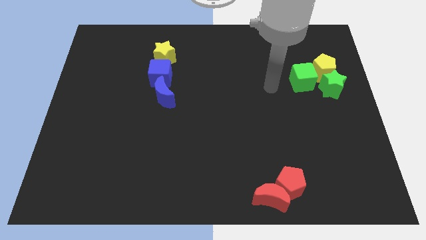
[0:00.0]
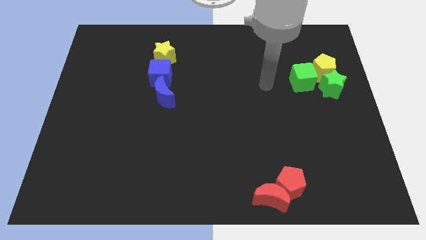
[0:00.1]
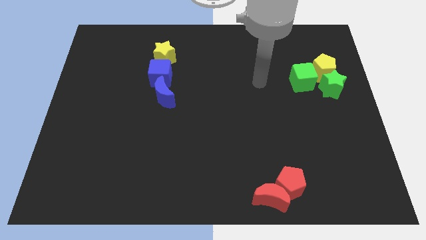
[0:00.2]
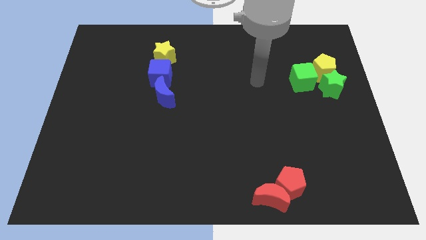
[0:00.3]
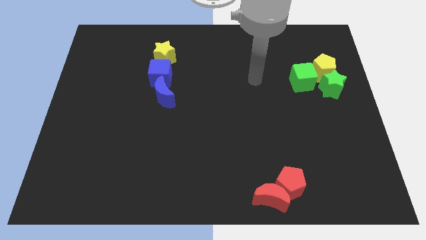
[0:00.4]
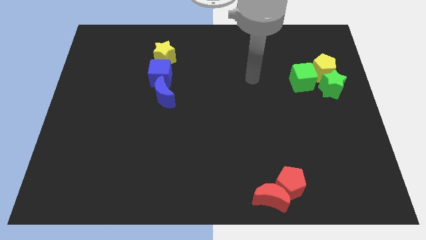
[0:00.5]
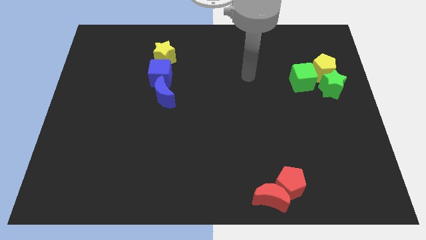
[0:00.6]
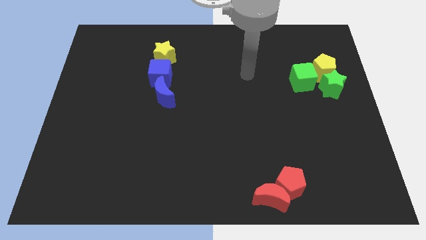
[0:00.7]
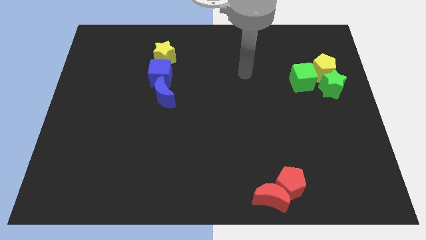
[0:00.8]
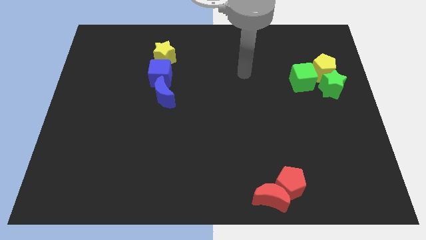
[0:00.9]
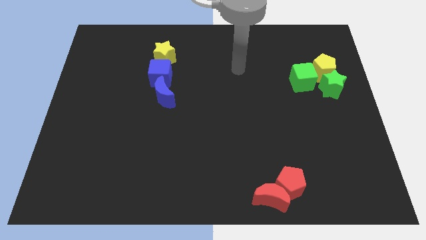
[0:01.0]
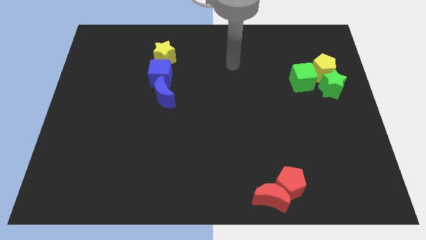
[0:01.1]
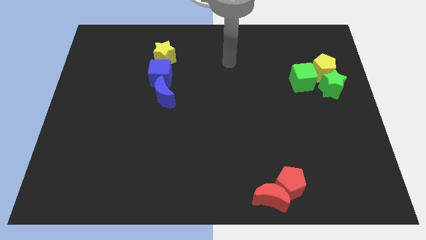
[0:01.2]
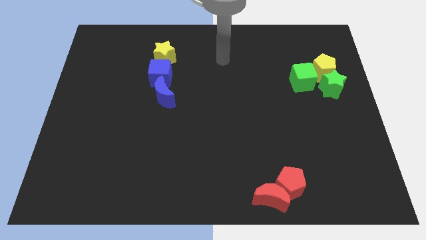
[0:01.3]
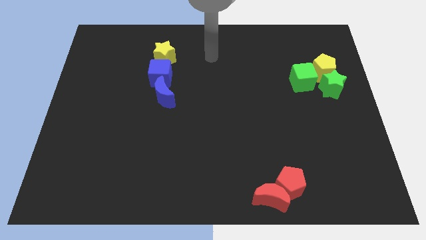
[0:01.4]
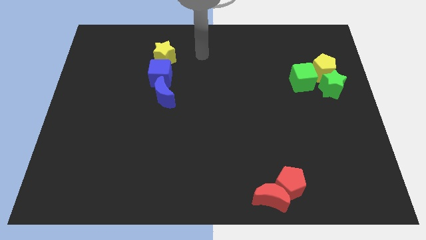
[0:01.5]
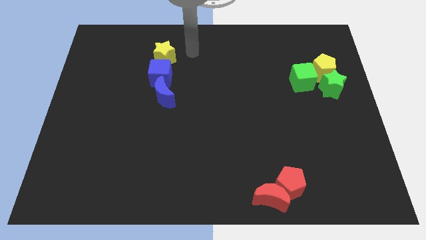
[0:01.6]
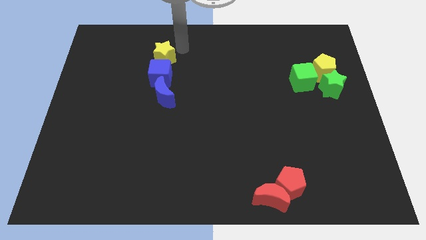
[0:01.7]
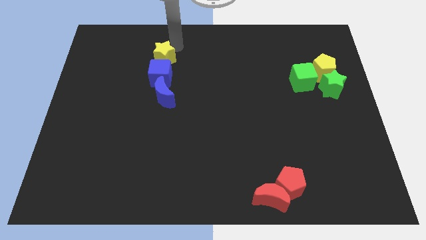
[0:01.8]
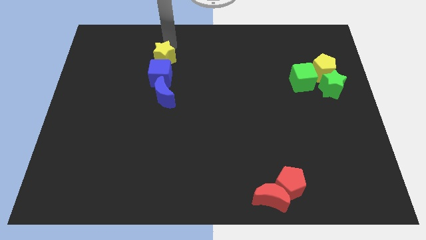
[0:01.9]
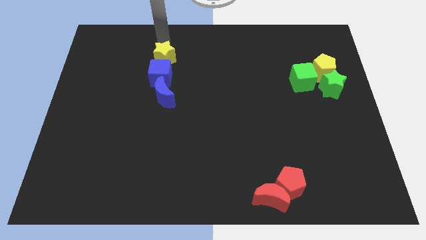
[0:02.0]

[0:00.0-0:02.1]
move your arm away from green cube

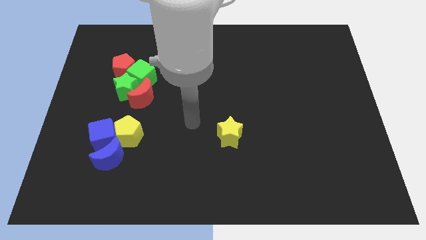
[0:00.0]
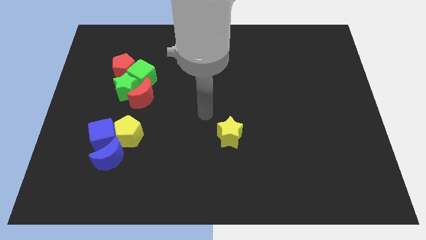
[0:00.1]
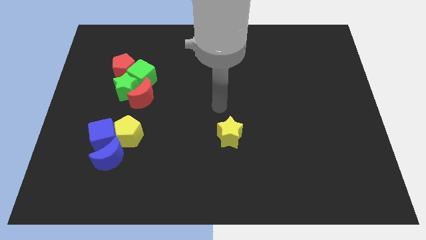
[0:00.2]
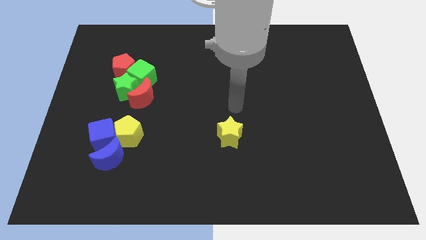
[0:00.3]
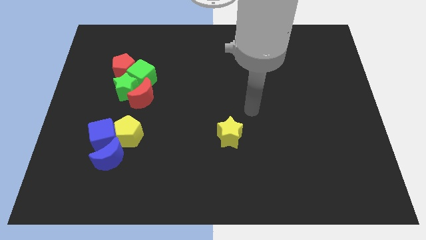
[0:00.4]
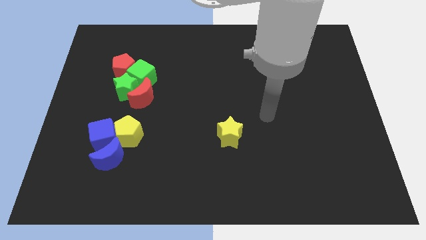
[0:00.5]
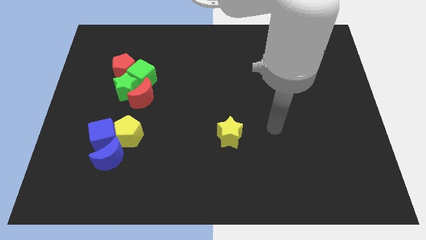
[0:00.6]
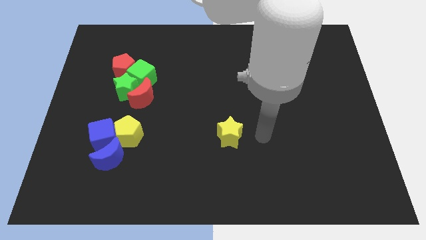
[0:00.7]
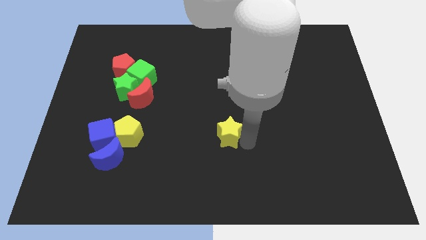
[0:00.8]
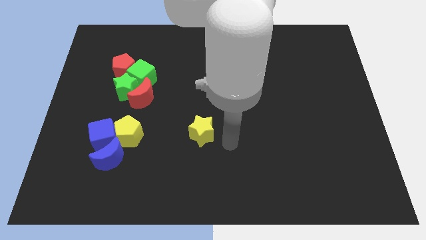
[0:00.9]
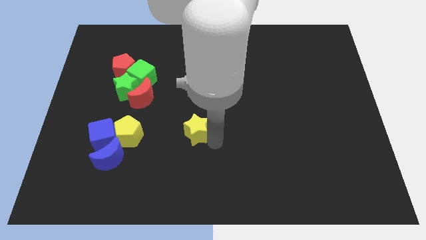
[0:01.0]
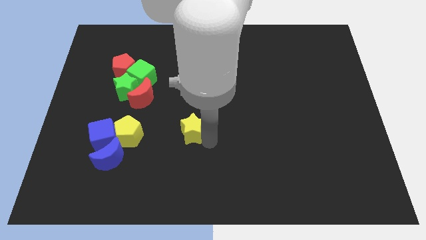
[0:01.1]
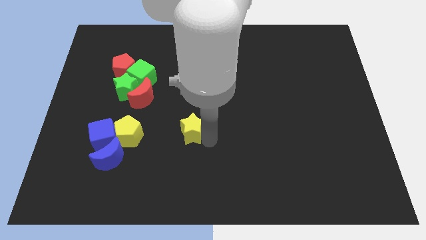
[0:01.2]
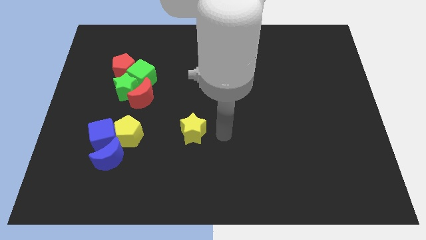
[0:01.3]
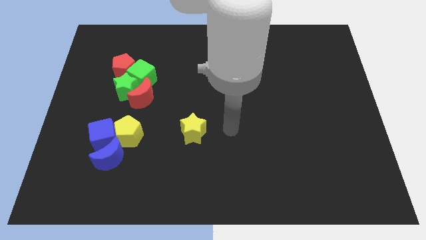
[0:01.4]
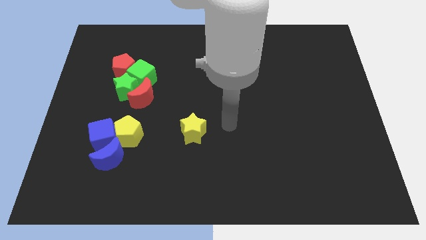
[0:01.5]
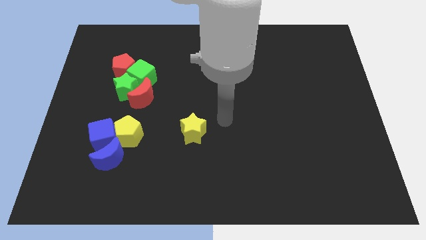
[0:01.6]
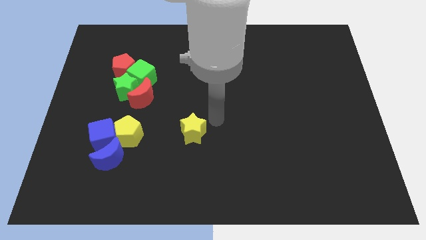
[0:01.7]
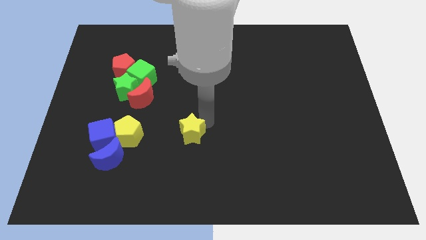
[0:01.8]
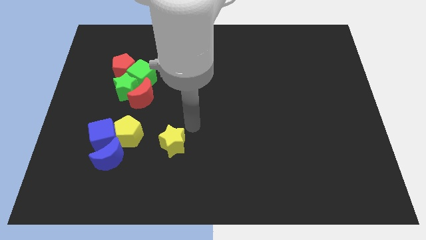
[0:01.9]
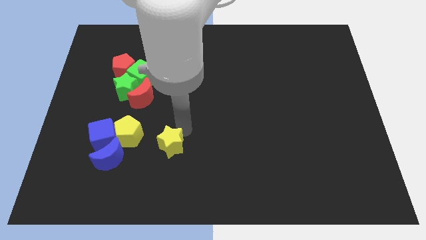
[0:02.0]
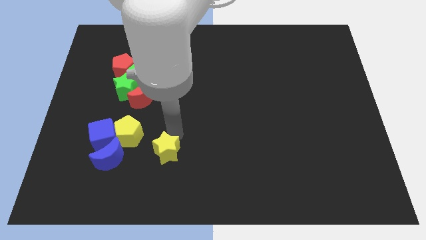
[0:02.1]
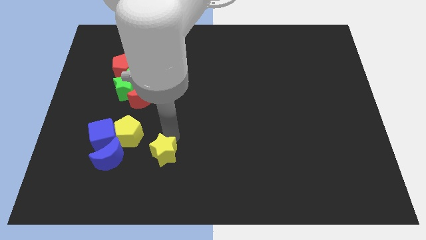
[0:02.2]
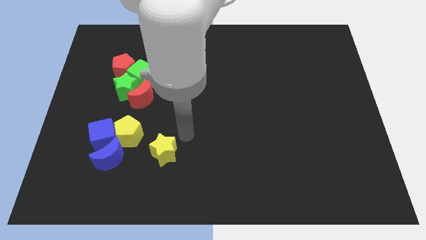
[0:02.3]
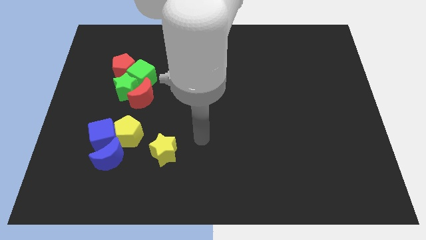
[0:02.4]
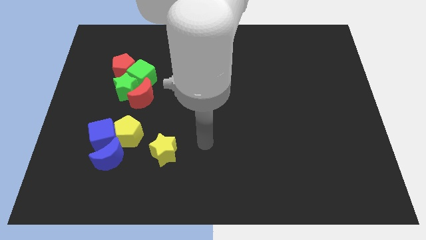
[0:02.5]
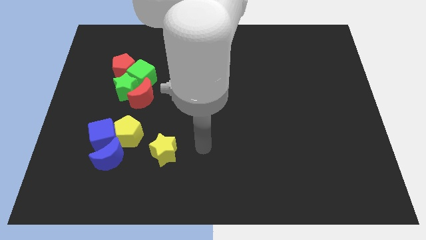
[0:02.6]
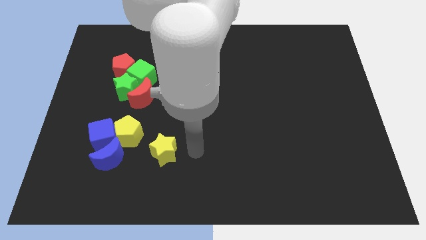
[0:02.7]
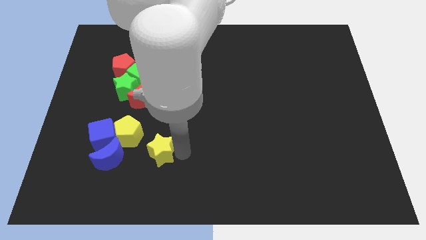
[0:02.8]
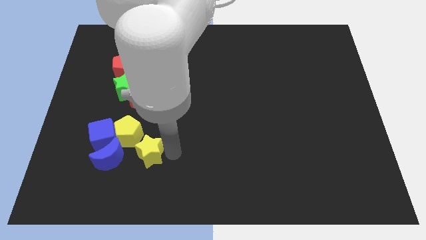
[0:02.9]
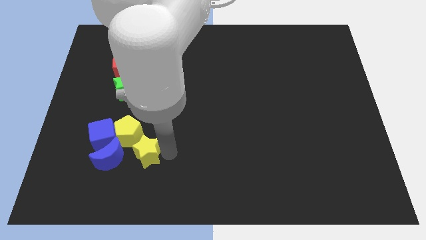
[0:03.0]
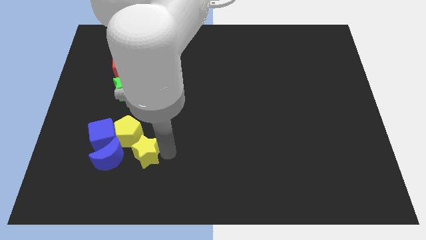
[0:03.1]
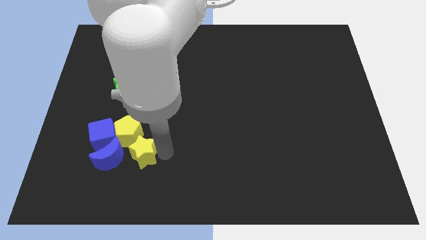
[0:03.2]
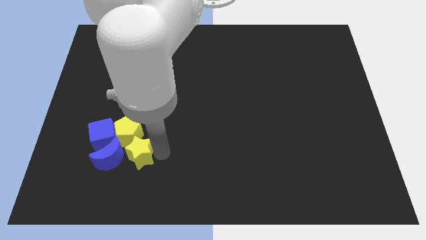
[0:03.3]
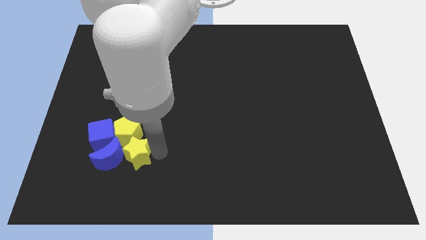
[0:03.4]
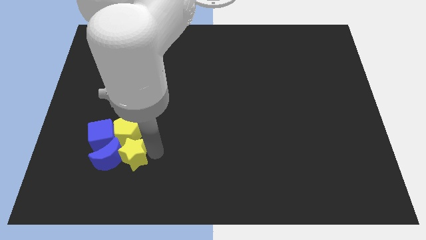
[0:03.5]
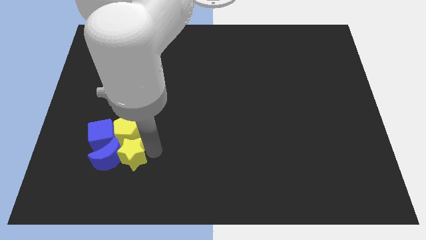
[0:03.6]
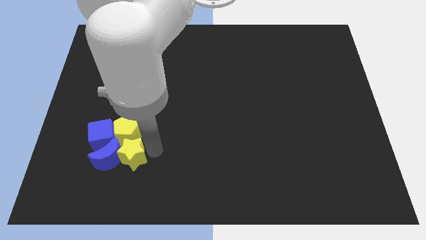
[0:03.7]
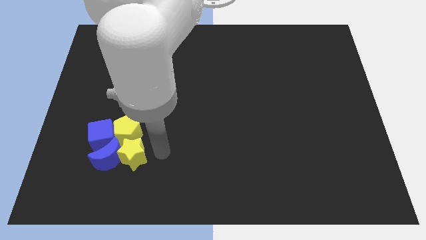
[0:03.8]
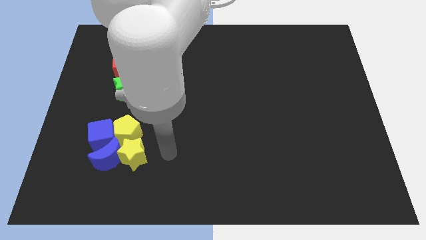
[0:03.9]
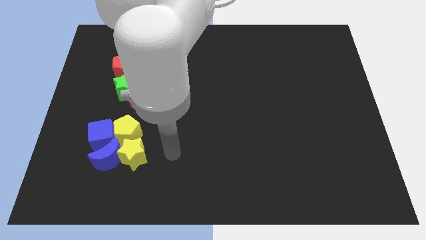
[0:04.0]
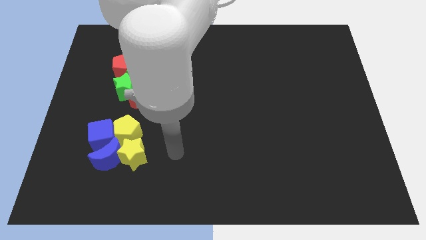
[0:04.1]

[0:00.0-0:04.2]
place the yellow star right to the blue moon

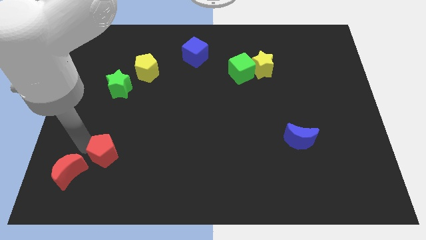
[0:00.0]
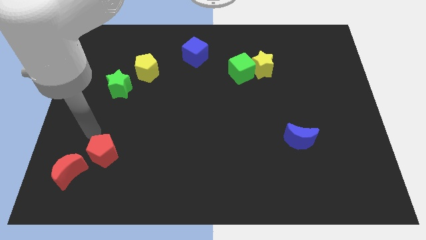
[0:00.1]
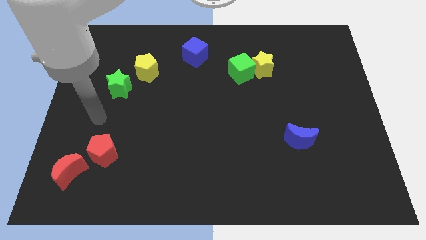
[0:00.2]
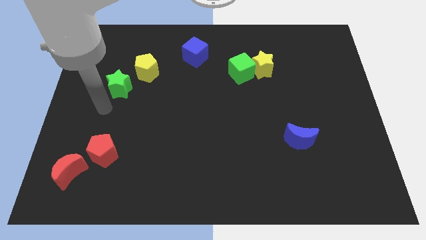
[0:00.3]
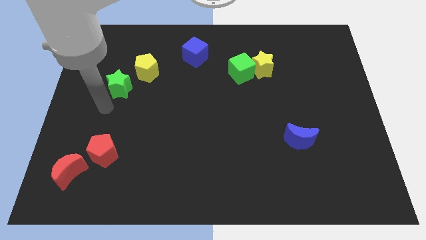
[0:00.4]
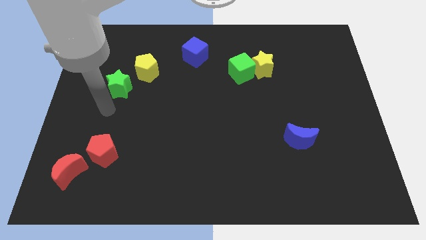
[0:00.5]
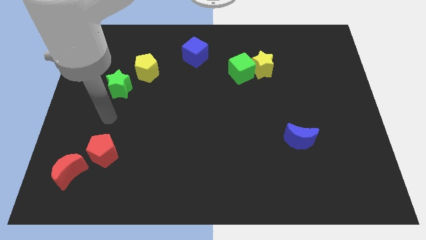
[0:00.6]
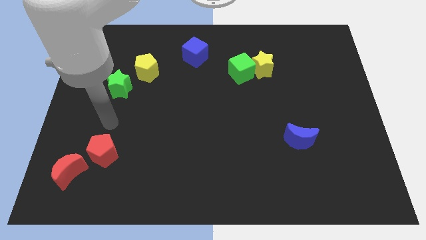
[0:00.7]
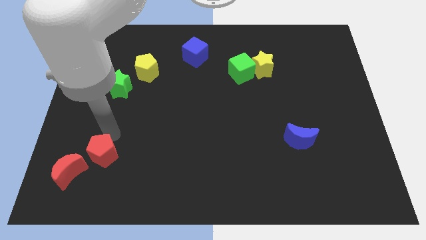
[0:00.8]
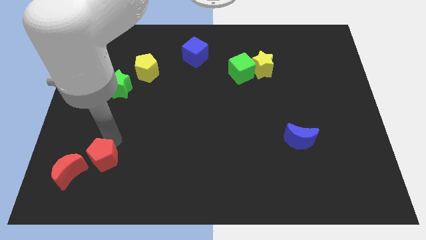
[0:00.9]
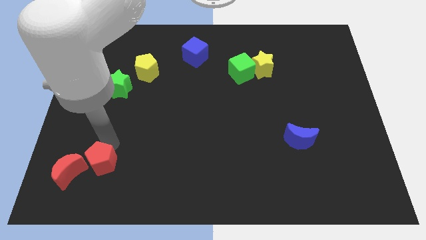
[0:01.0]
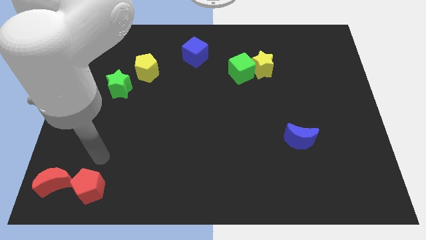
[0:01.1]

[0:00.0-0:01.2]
push red pentagon downwards

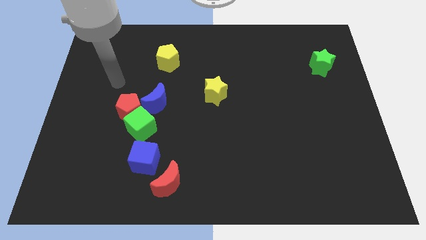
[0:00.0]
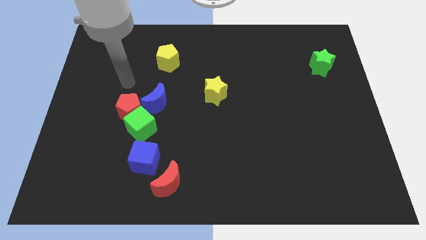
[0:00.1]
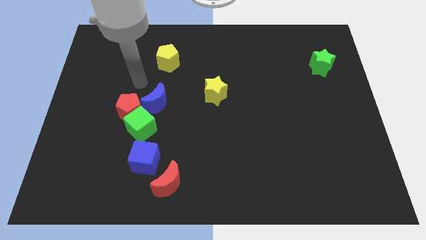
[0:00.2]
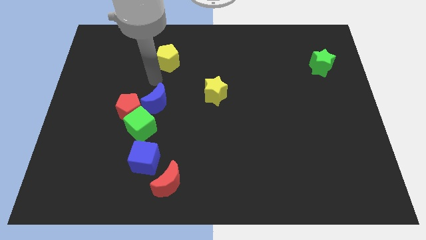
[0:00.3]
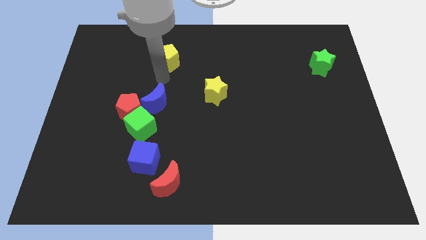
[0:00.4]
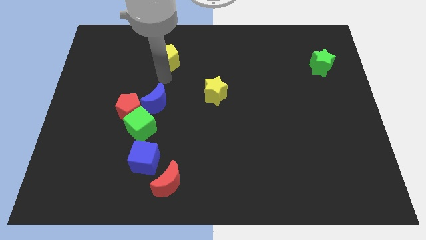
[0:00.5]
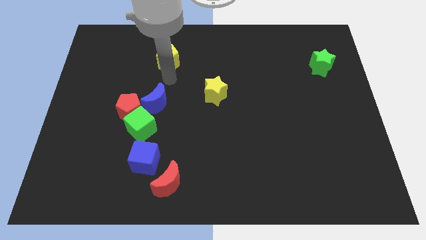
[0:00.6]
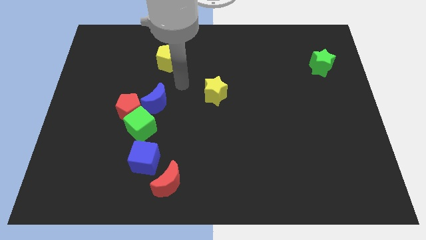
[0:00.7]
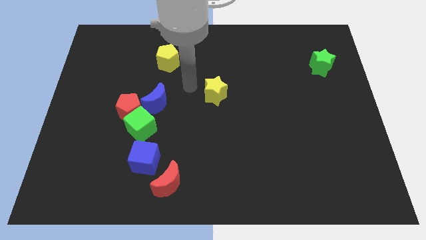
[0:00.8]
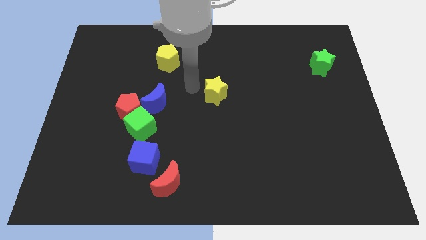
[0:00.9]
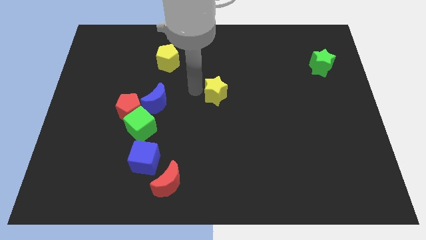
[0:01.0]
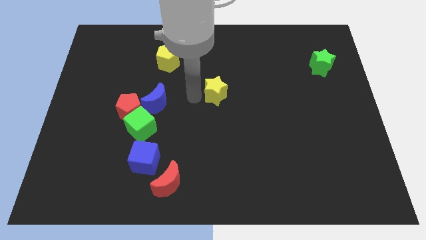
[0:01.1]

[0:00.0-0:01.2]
point your arm to the left side of yellow star

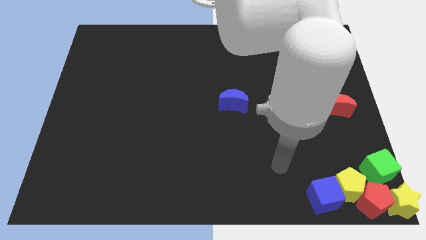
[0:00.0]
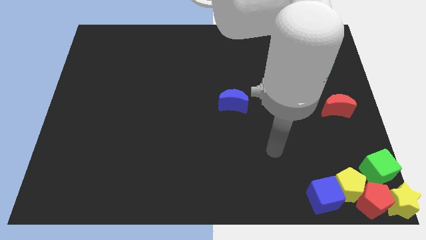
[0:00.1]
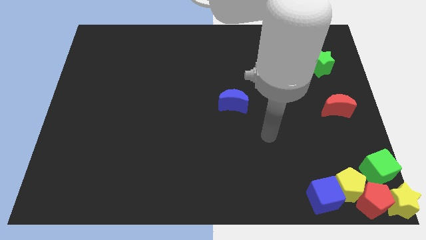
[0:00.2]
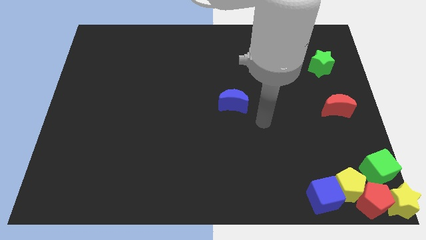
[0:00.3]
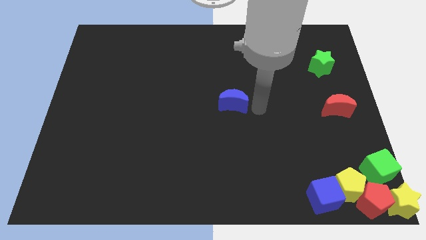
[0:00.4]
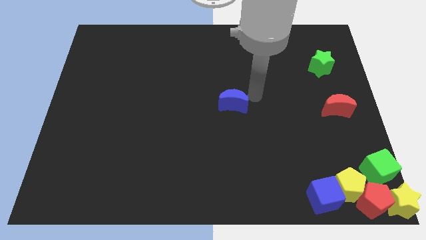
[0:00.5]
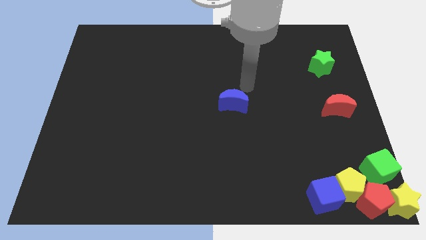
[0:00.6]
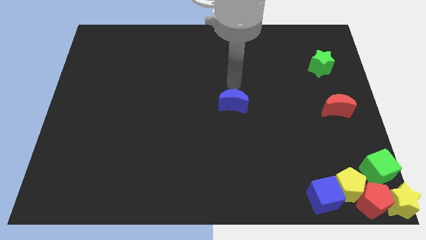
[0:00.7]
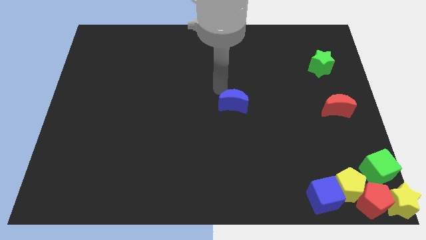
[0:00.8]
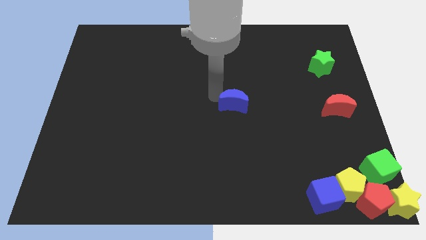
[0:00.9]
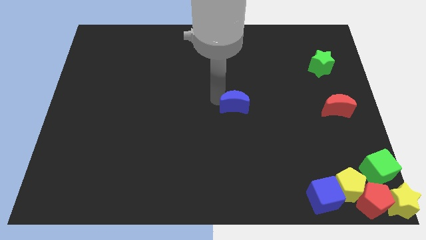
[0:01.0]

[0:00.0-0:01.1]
move your arm into the blue crescent
